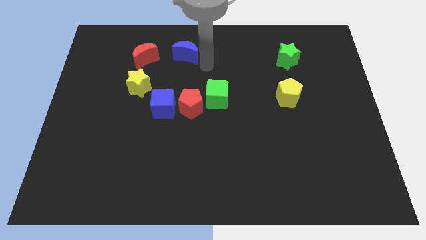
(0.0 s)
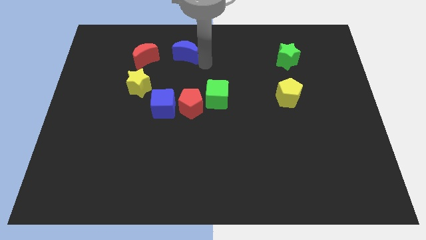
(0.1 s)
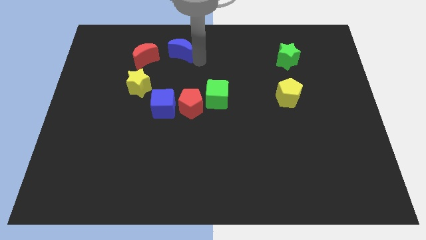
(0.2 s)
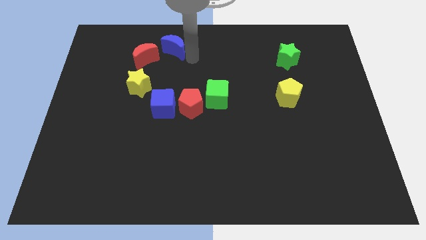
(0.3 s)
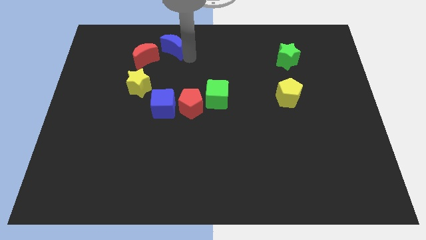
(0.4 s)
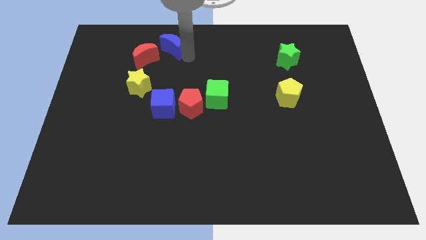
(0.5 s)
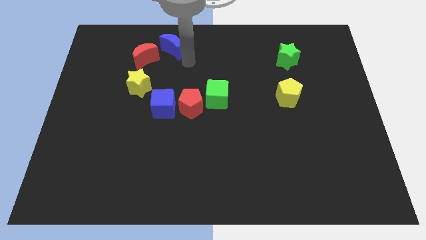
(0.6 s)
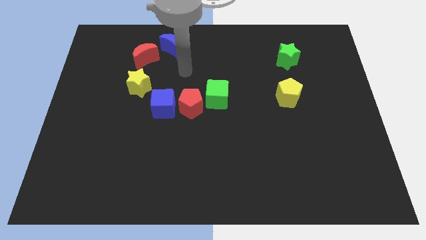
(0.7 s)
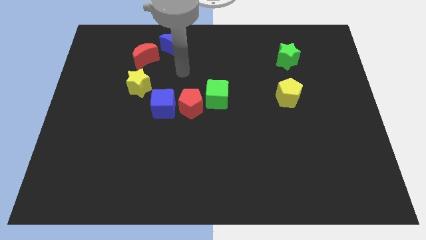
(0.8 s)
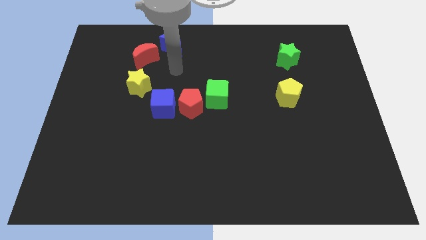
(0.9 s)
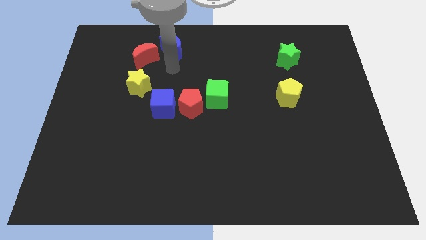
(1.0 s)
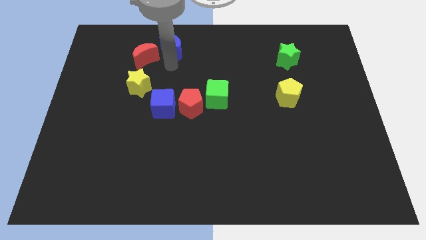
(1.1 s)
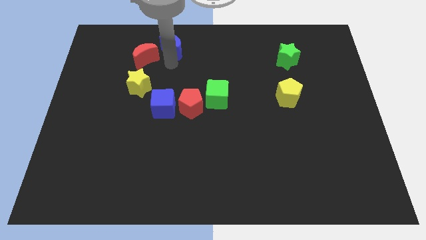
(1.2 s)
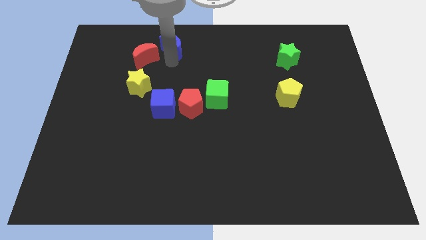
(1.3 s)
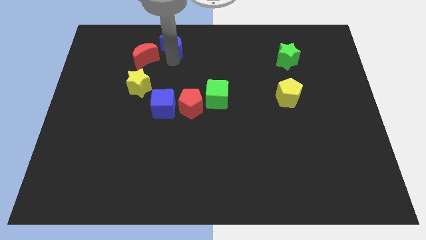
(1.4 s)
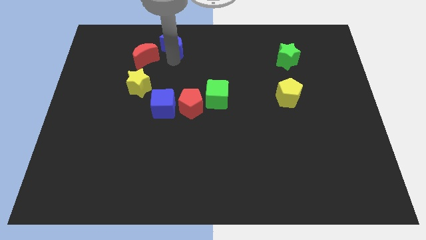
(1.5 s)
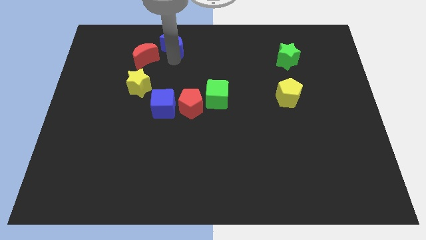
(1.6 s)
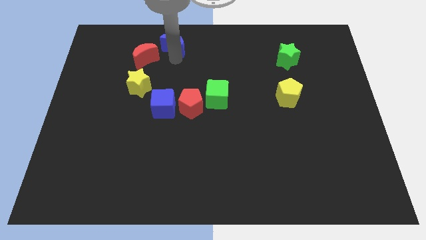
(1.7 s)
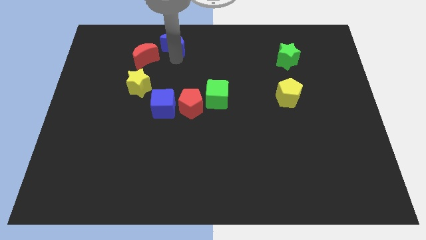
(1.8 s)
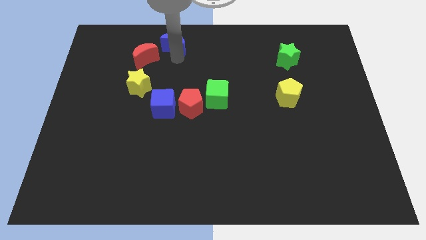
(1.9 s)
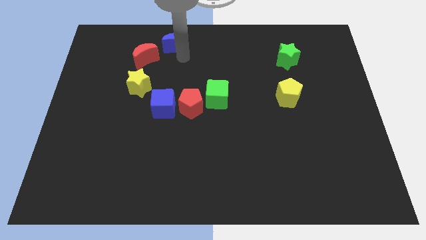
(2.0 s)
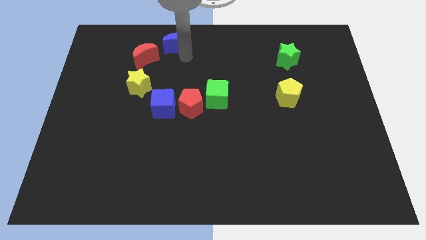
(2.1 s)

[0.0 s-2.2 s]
place the blue crescent above the red crescent

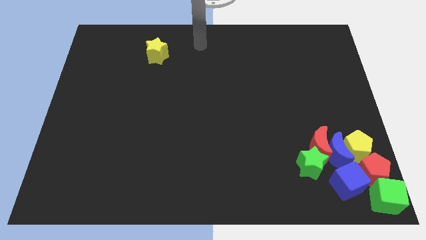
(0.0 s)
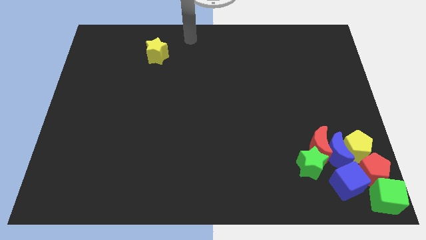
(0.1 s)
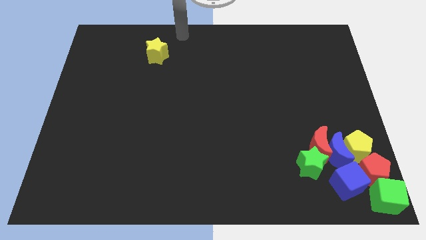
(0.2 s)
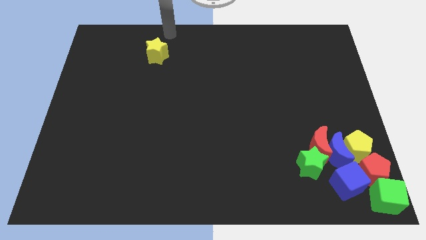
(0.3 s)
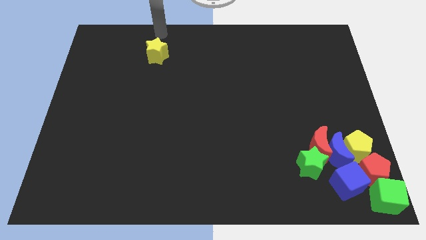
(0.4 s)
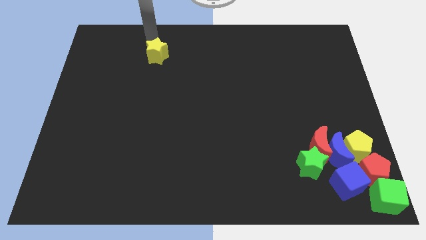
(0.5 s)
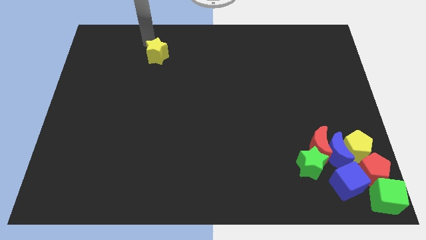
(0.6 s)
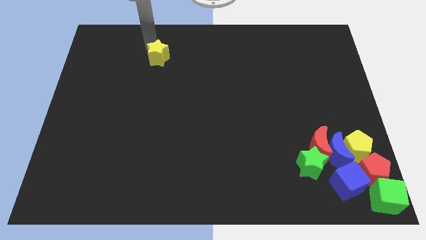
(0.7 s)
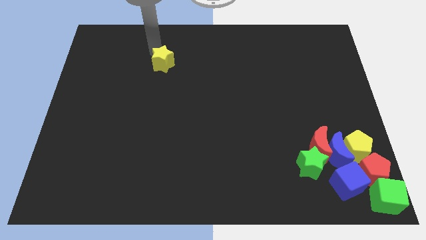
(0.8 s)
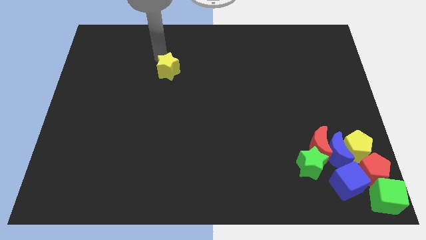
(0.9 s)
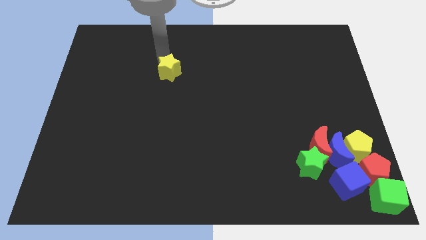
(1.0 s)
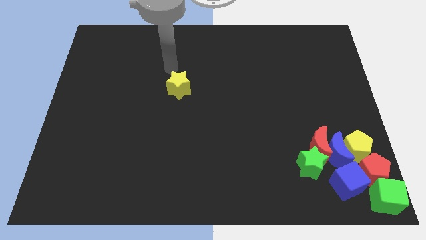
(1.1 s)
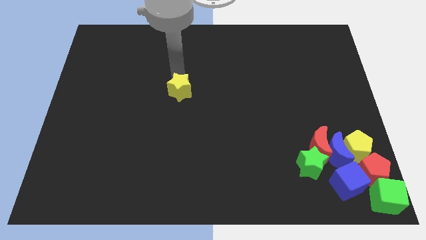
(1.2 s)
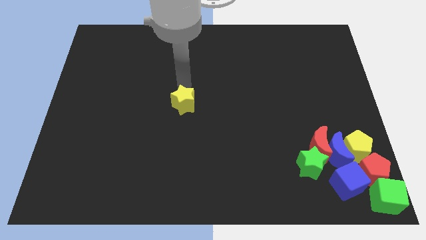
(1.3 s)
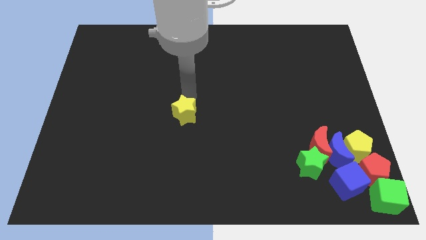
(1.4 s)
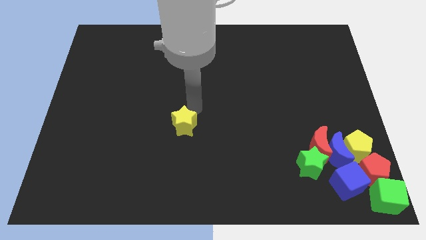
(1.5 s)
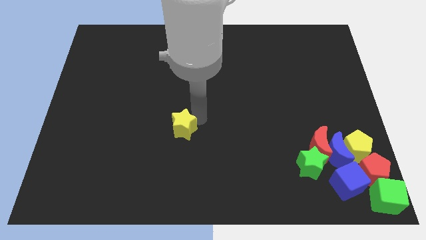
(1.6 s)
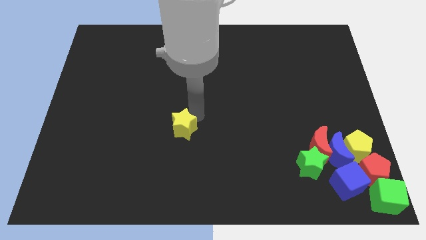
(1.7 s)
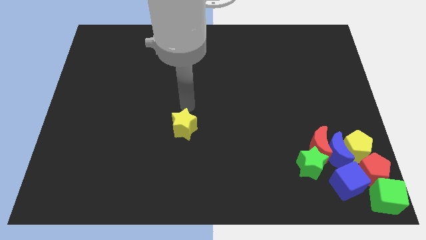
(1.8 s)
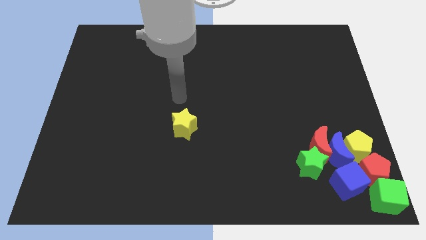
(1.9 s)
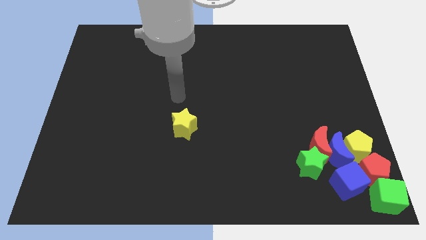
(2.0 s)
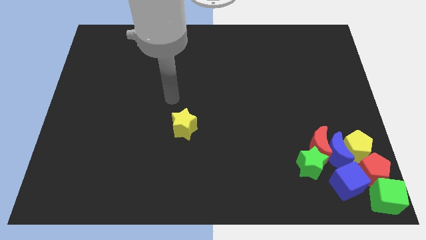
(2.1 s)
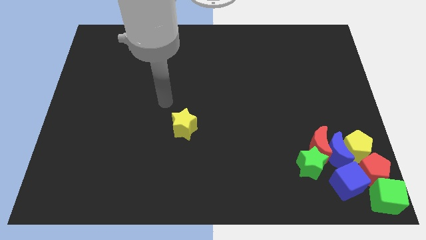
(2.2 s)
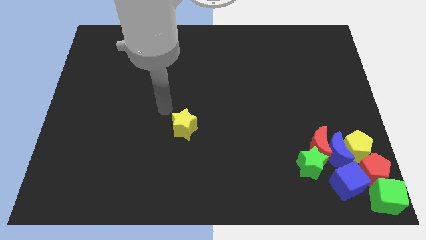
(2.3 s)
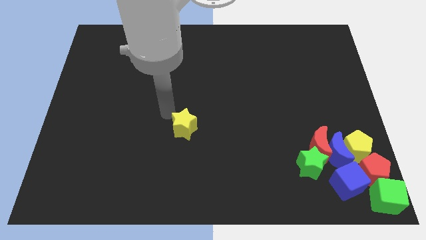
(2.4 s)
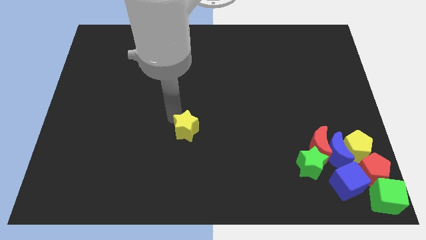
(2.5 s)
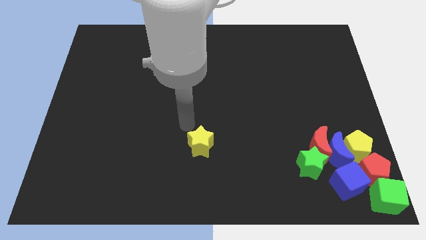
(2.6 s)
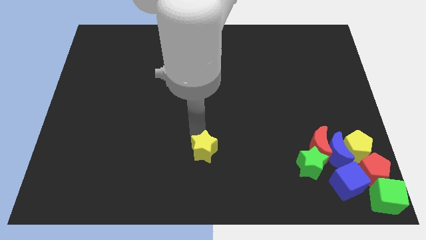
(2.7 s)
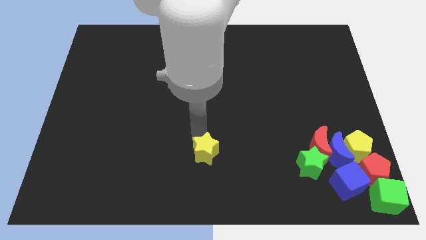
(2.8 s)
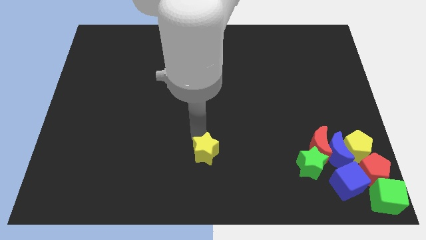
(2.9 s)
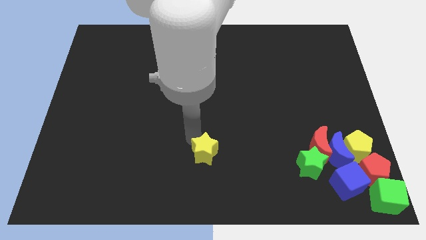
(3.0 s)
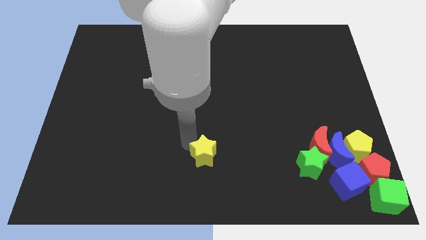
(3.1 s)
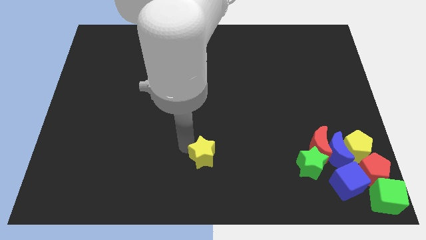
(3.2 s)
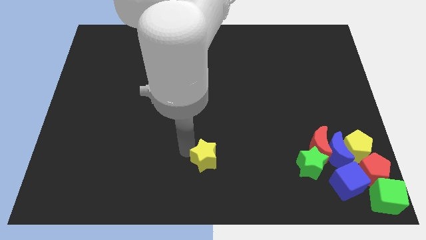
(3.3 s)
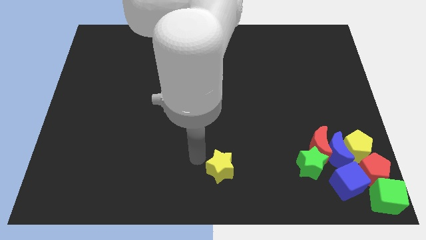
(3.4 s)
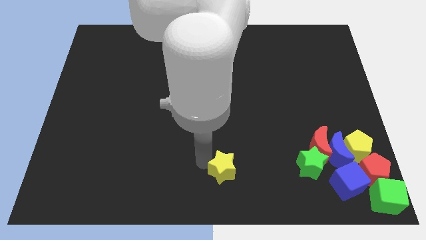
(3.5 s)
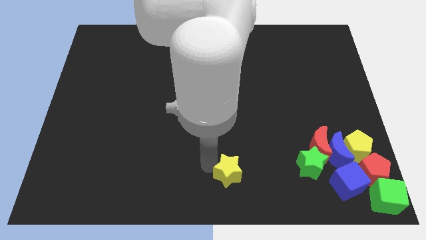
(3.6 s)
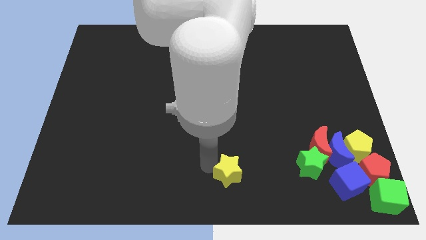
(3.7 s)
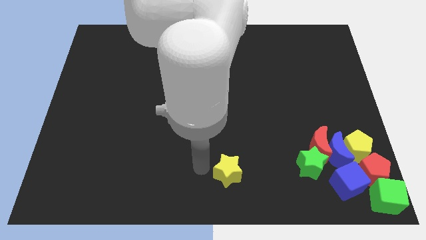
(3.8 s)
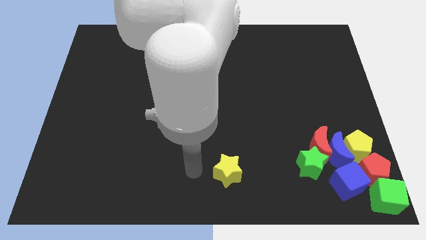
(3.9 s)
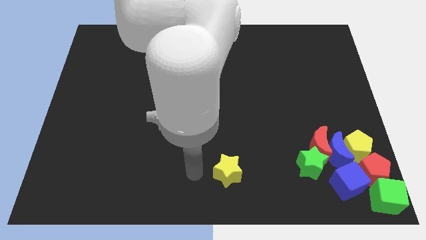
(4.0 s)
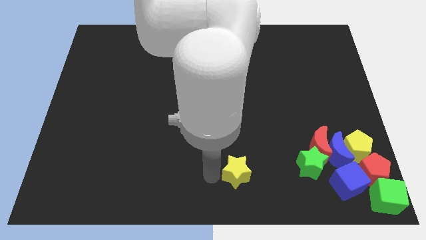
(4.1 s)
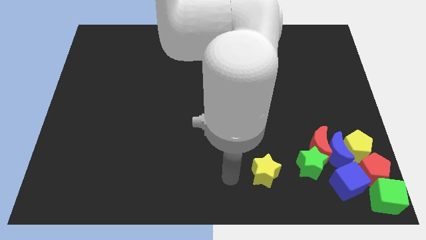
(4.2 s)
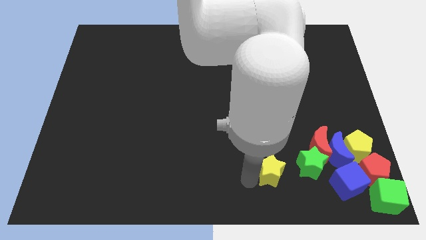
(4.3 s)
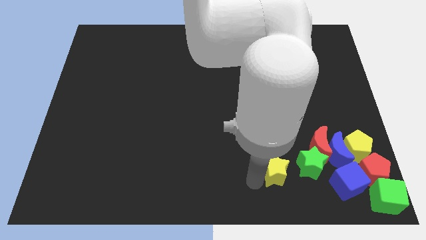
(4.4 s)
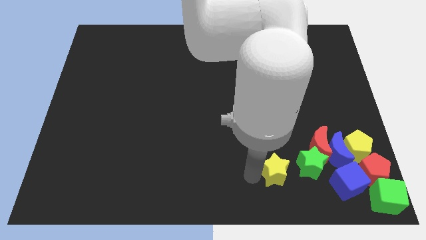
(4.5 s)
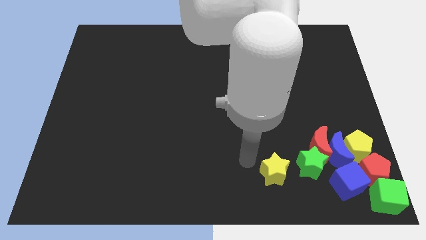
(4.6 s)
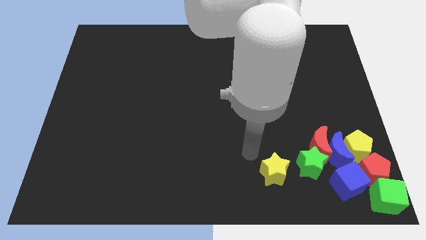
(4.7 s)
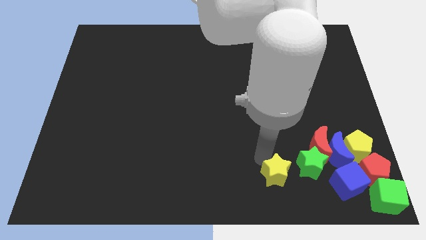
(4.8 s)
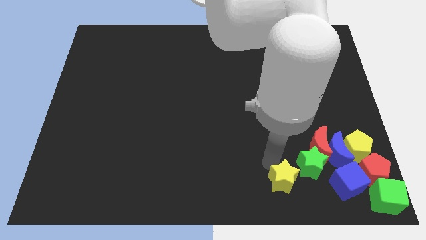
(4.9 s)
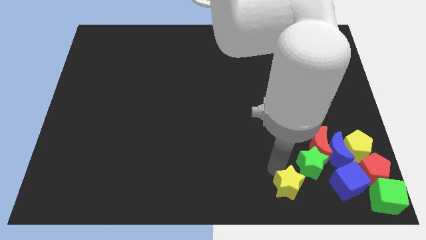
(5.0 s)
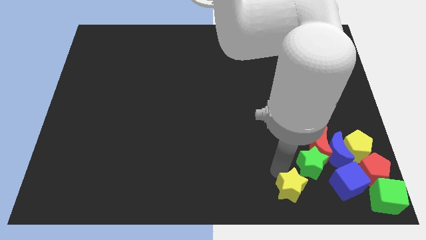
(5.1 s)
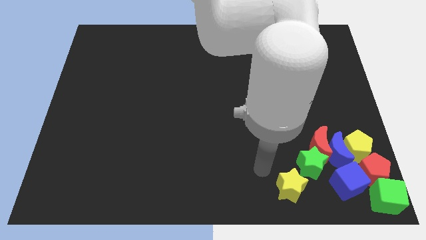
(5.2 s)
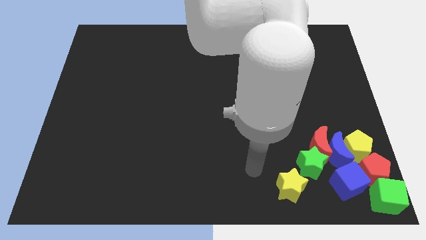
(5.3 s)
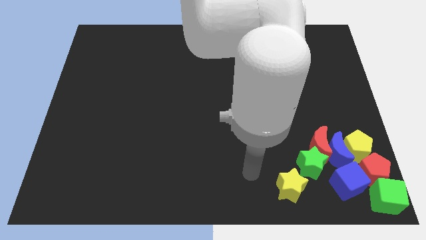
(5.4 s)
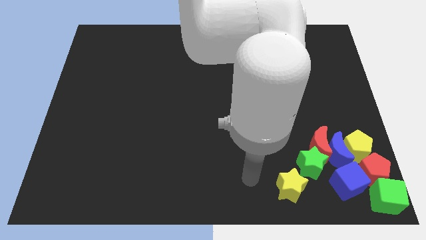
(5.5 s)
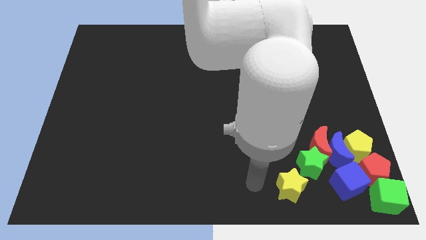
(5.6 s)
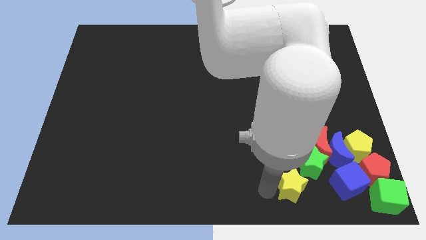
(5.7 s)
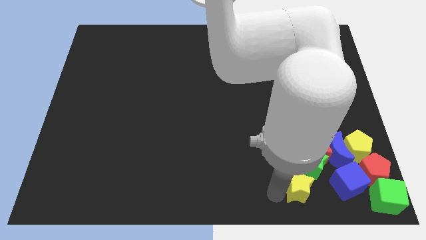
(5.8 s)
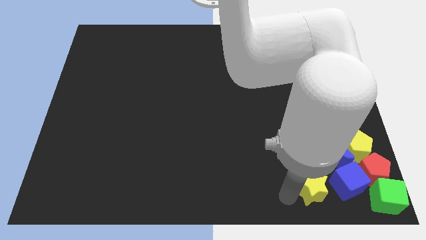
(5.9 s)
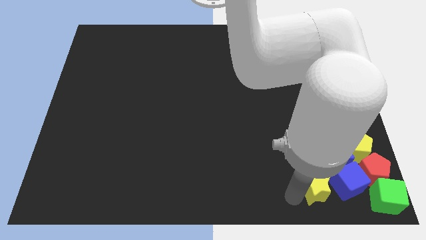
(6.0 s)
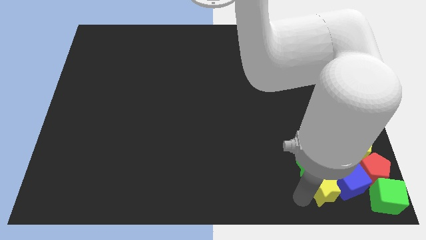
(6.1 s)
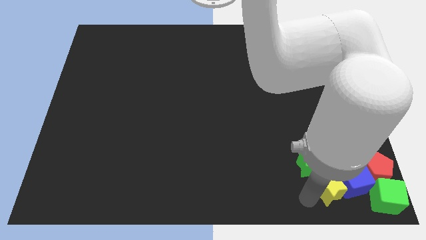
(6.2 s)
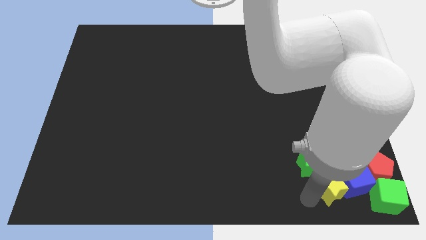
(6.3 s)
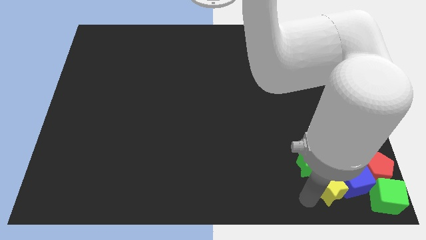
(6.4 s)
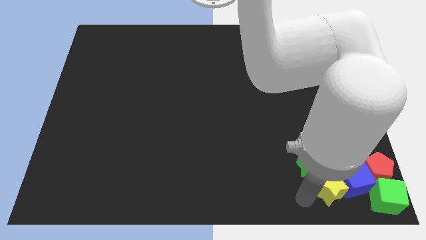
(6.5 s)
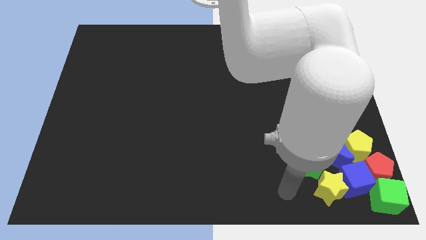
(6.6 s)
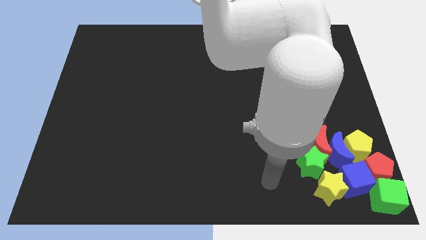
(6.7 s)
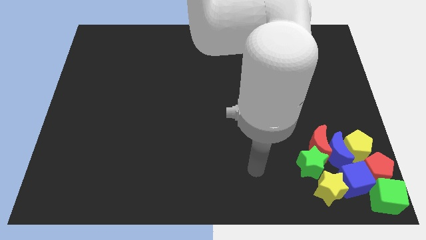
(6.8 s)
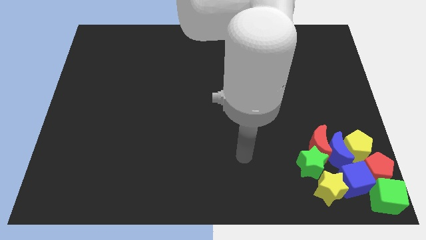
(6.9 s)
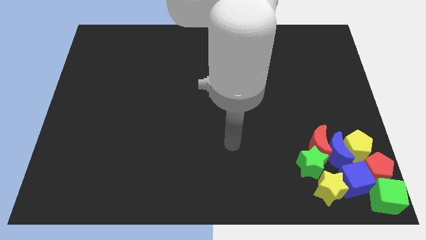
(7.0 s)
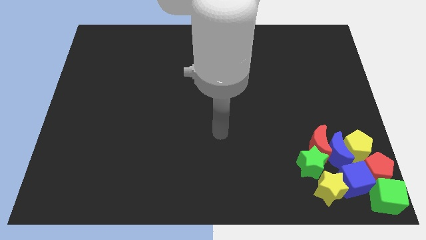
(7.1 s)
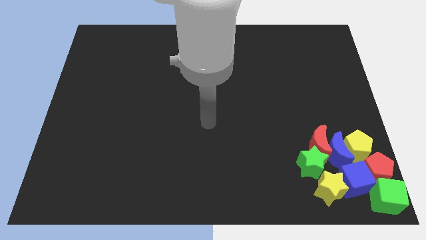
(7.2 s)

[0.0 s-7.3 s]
slide the yellow star into the bottom right side of the board
